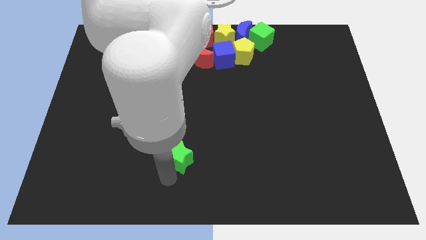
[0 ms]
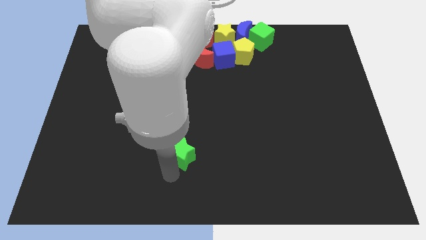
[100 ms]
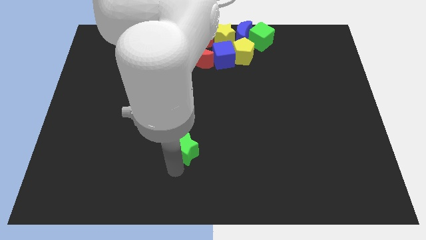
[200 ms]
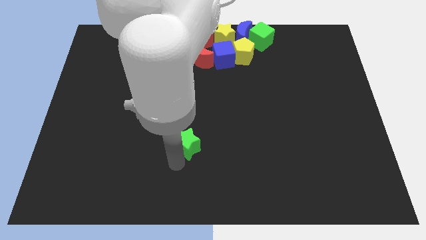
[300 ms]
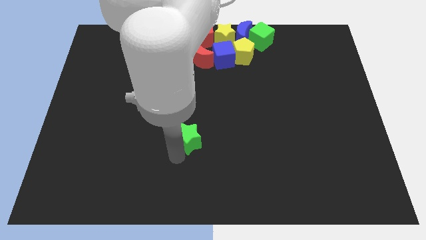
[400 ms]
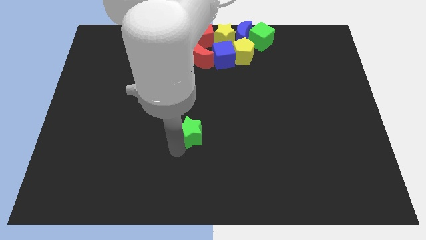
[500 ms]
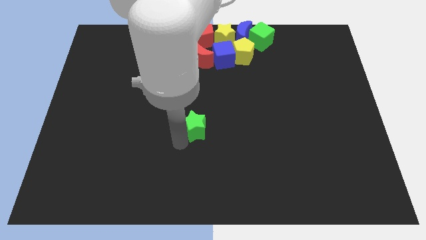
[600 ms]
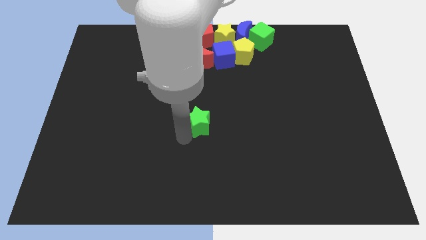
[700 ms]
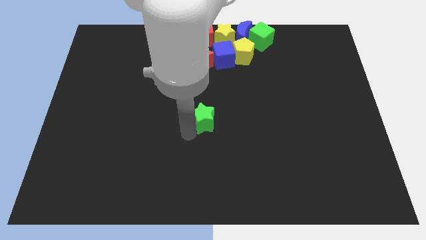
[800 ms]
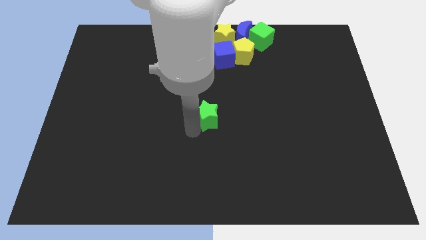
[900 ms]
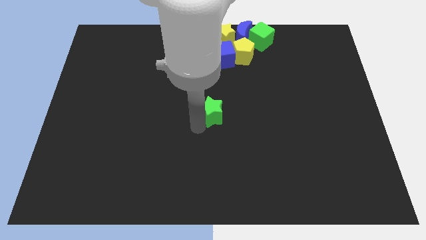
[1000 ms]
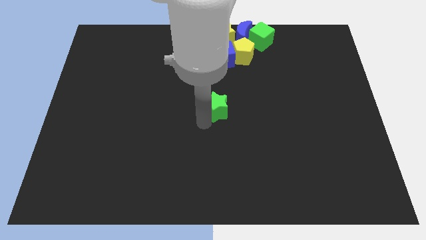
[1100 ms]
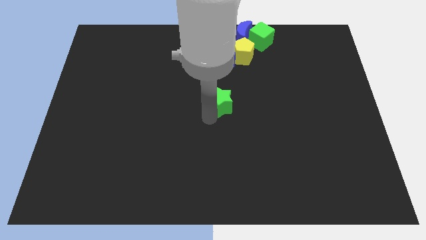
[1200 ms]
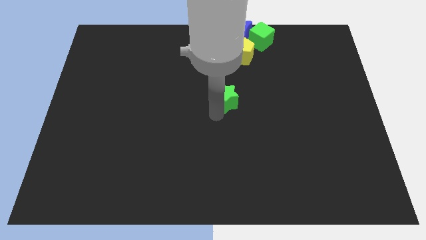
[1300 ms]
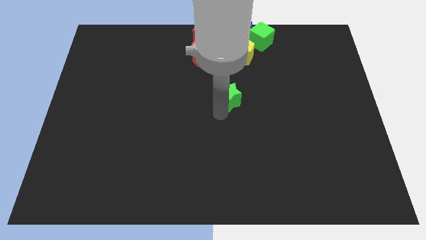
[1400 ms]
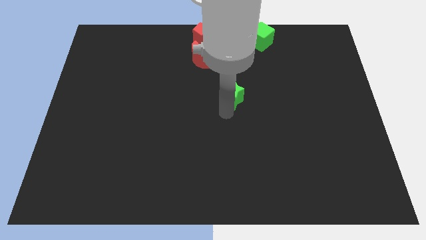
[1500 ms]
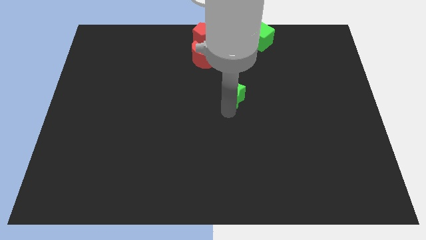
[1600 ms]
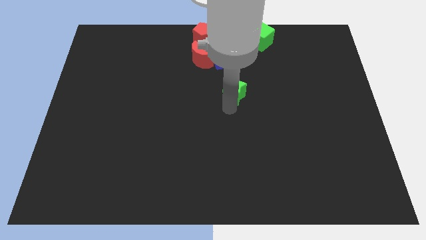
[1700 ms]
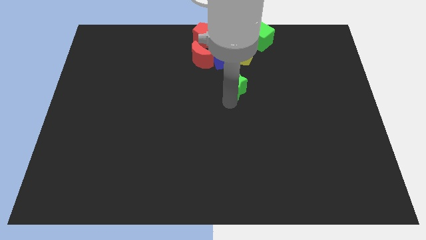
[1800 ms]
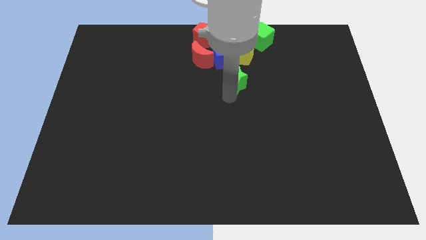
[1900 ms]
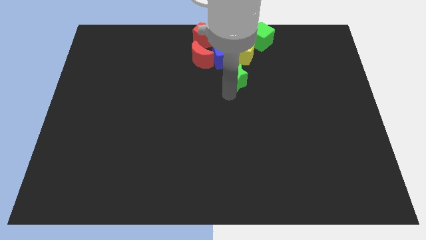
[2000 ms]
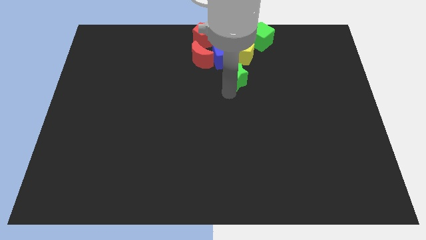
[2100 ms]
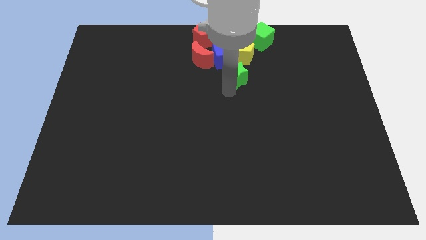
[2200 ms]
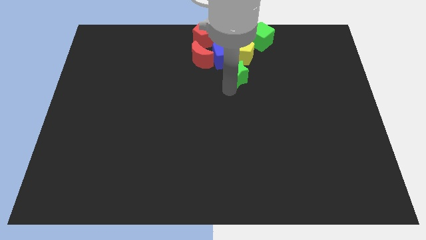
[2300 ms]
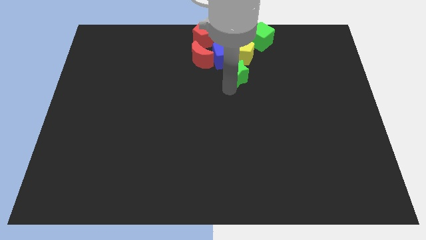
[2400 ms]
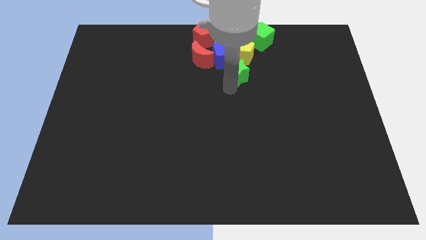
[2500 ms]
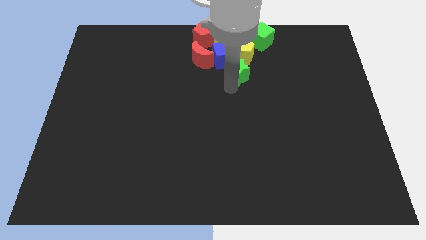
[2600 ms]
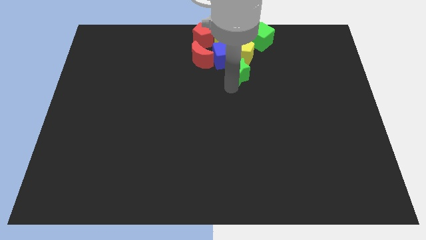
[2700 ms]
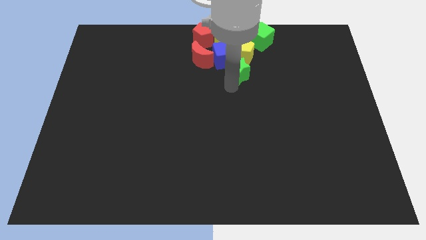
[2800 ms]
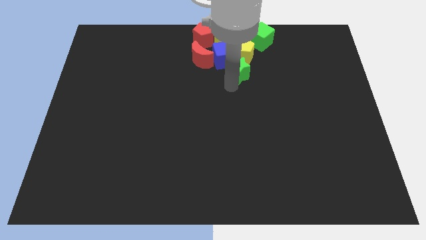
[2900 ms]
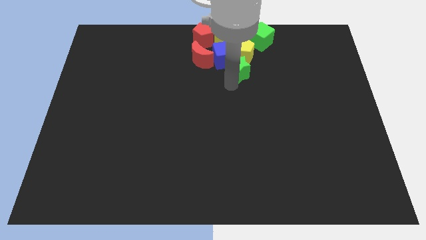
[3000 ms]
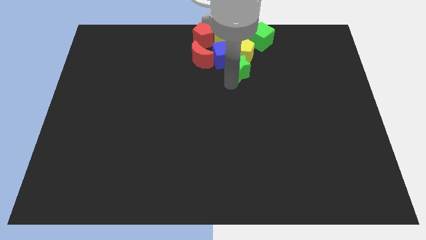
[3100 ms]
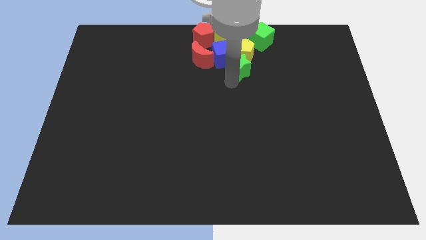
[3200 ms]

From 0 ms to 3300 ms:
move the green star to the bottom of the yellow pentagon

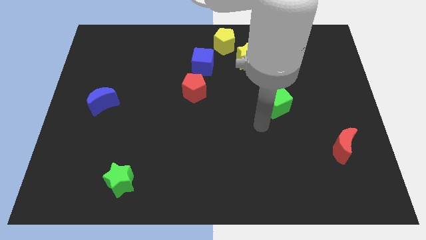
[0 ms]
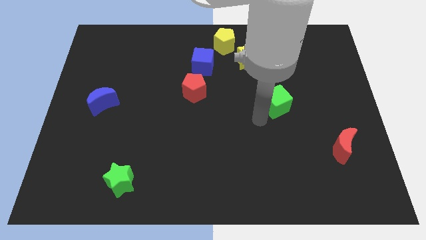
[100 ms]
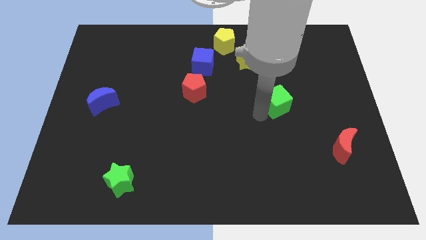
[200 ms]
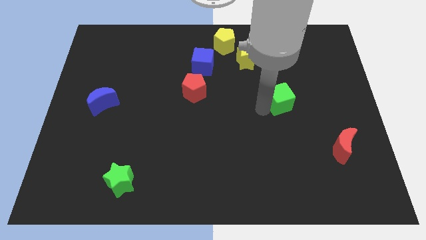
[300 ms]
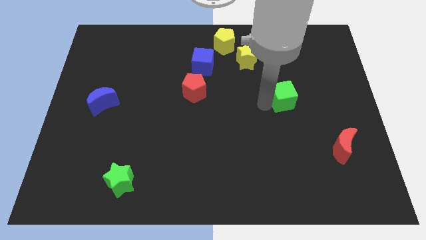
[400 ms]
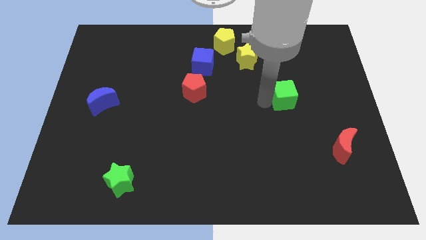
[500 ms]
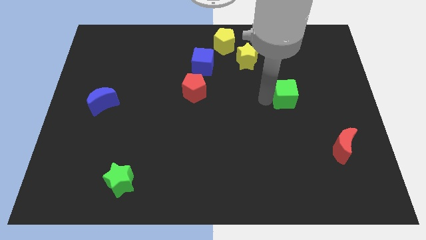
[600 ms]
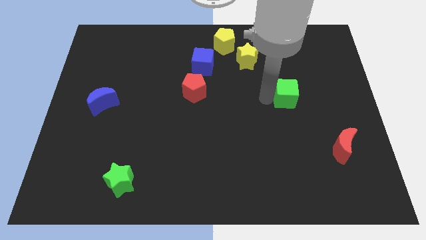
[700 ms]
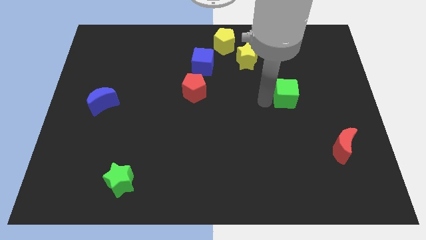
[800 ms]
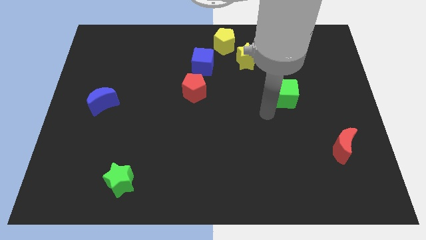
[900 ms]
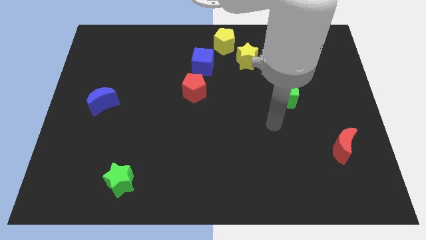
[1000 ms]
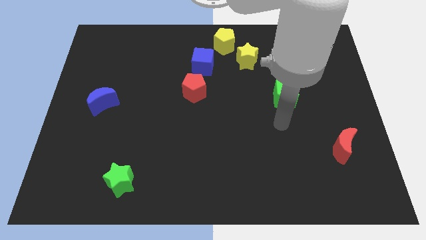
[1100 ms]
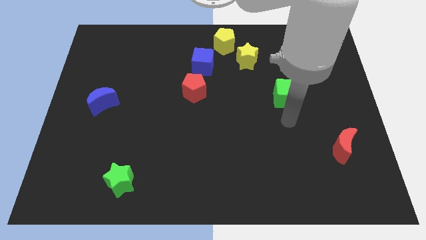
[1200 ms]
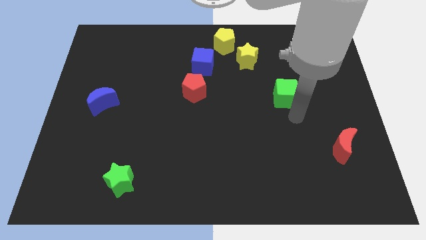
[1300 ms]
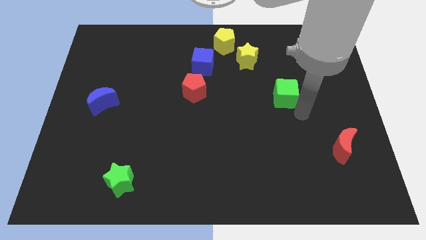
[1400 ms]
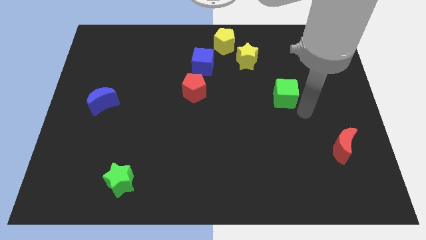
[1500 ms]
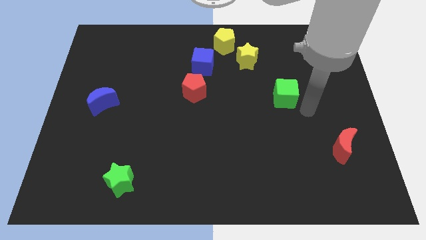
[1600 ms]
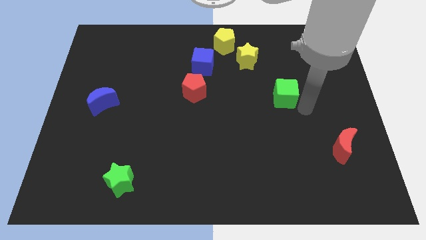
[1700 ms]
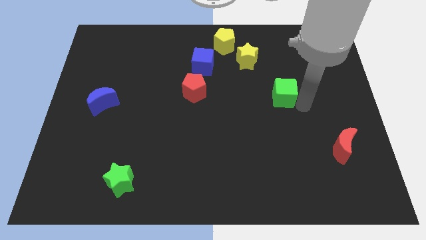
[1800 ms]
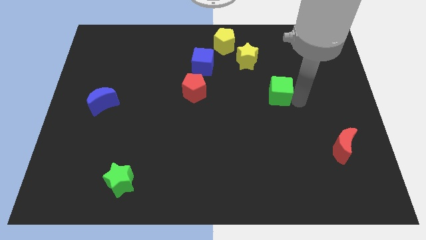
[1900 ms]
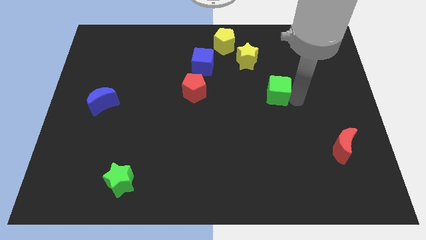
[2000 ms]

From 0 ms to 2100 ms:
place the green cube diagonally below the yellow star

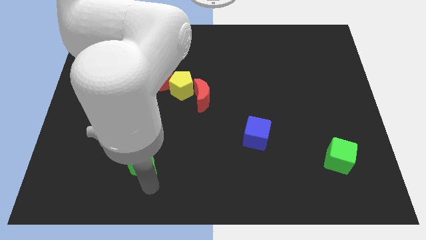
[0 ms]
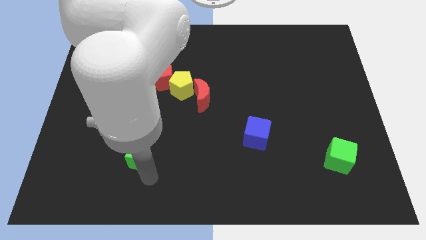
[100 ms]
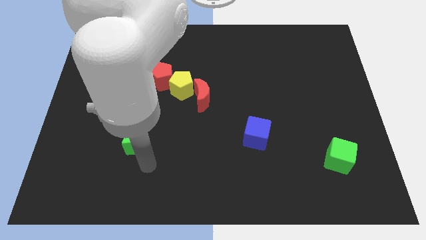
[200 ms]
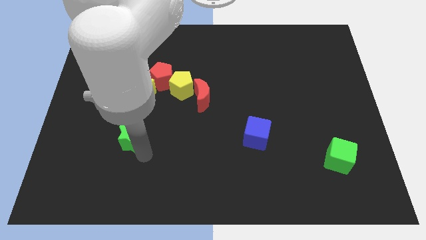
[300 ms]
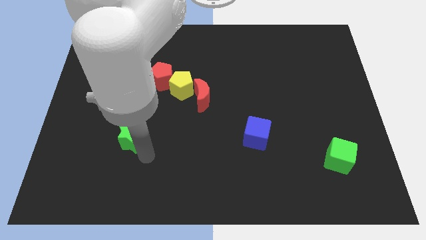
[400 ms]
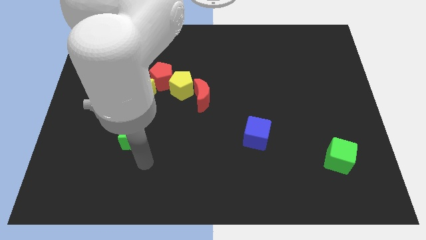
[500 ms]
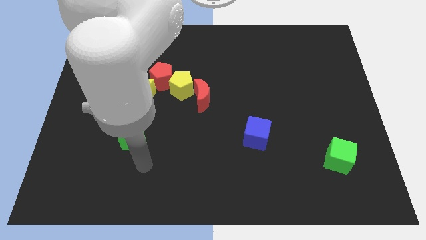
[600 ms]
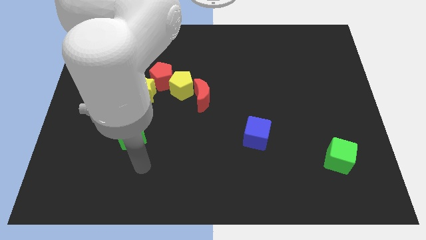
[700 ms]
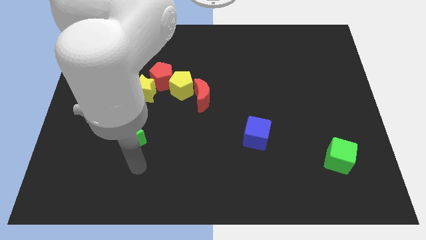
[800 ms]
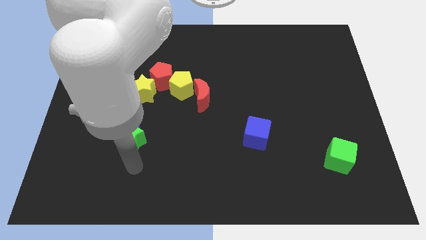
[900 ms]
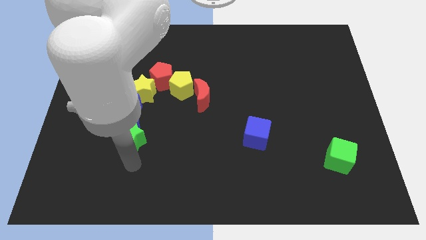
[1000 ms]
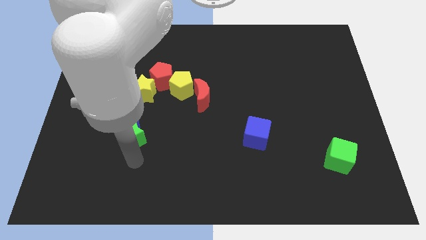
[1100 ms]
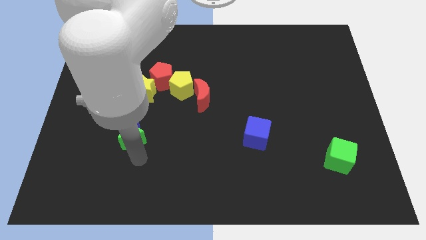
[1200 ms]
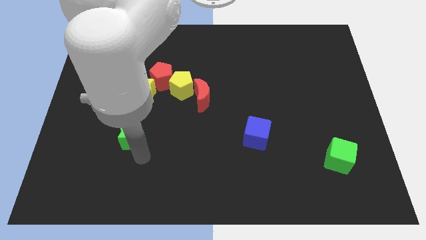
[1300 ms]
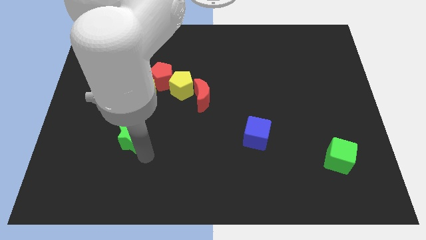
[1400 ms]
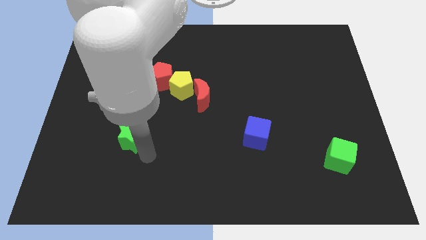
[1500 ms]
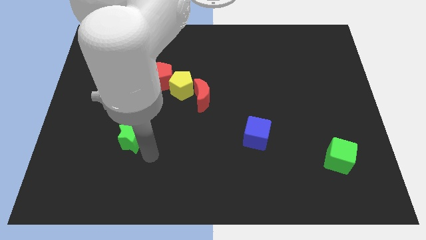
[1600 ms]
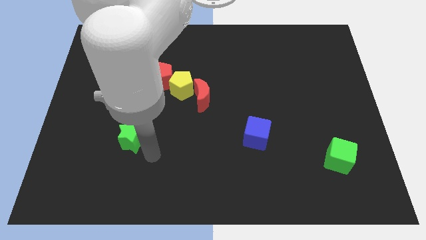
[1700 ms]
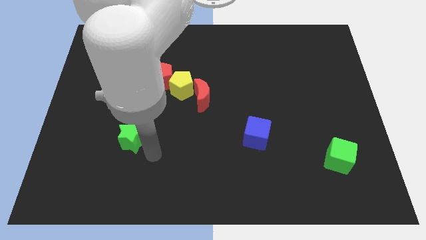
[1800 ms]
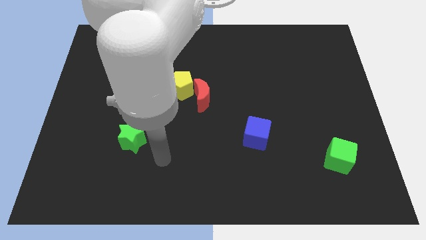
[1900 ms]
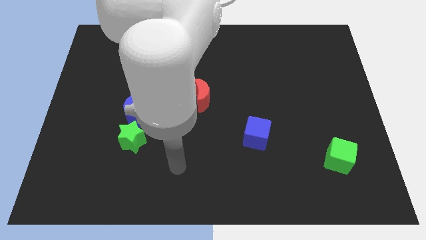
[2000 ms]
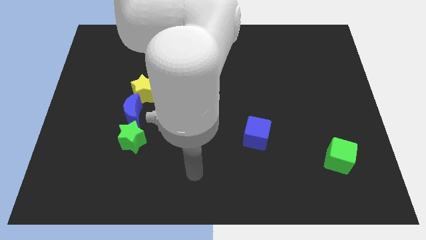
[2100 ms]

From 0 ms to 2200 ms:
move green star towards blue moon

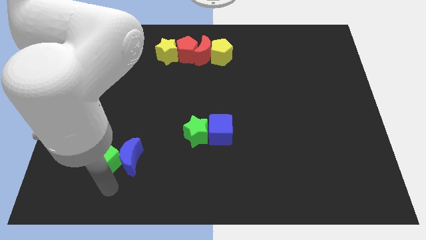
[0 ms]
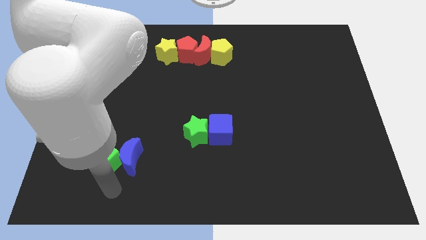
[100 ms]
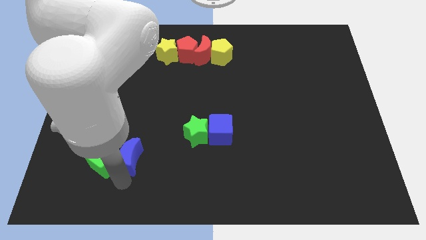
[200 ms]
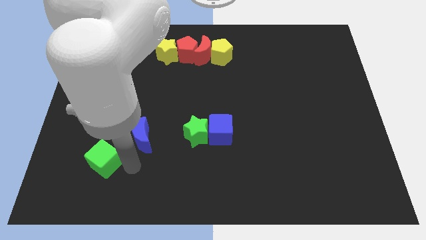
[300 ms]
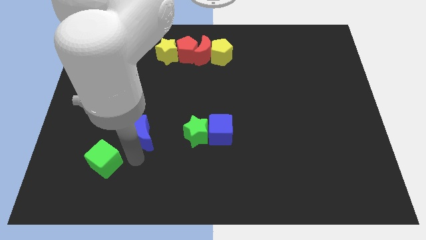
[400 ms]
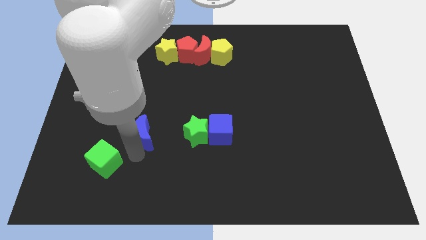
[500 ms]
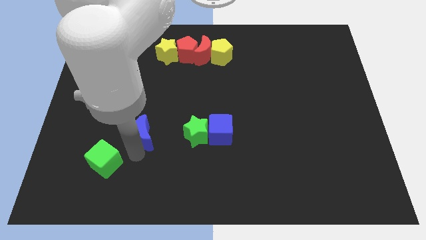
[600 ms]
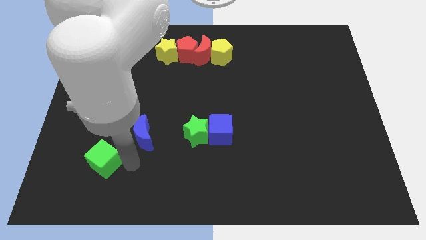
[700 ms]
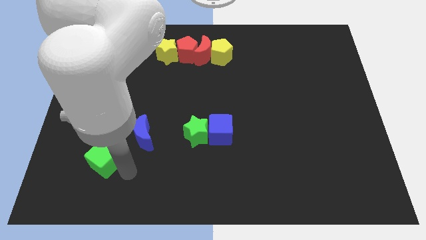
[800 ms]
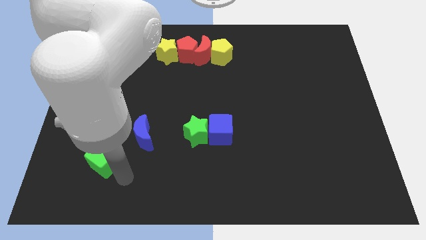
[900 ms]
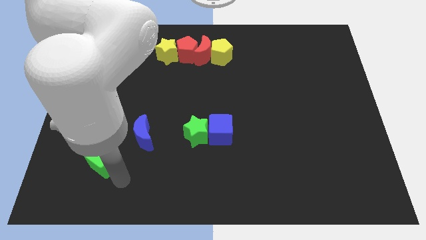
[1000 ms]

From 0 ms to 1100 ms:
separate the green cube and blue half moon

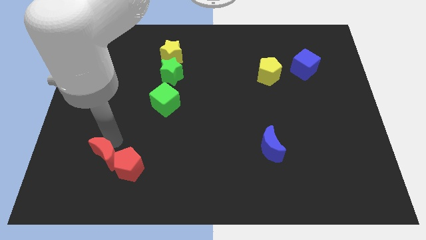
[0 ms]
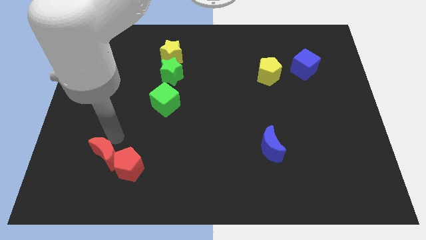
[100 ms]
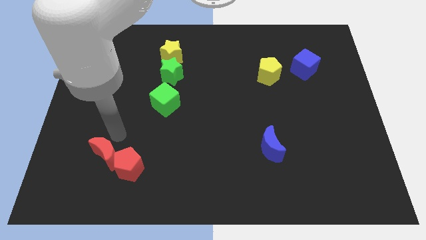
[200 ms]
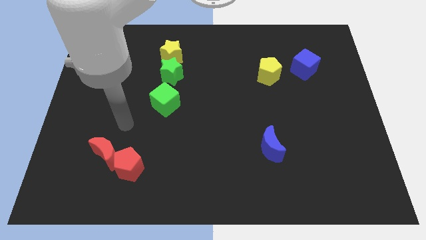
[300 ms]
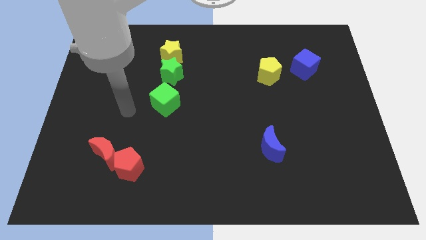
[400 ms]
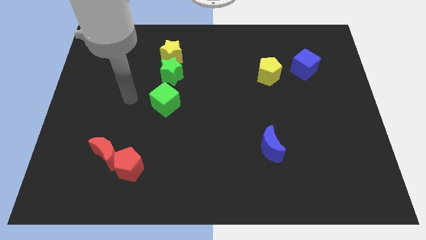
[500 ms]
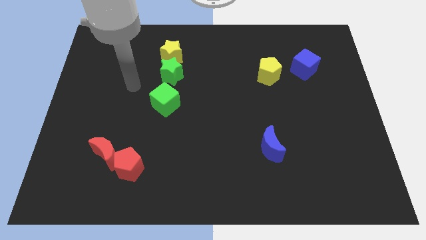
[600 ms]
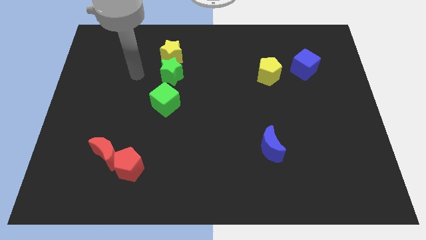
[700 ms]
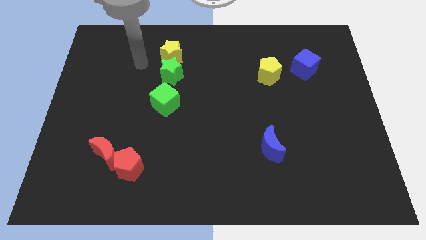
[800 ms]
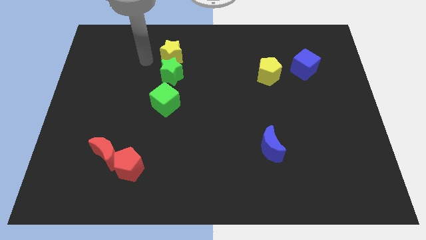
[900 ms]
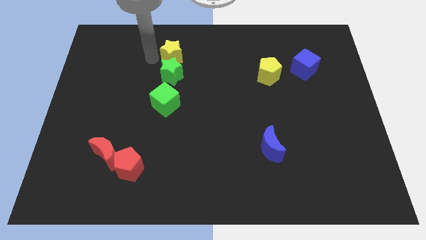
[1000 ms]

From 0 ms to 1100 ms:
move your arm left of the yellow star
